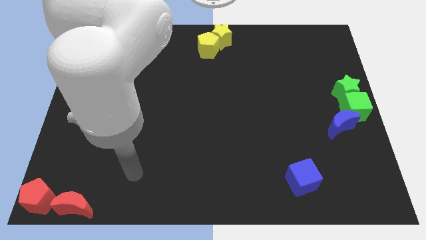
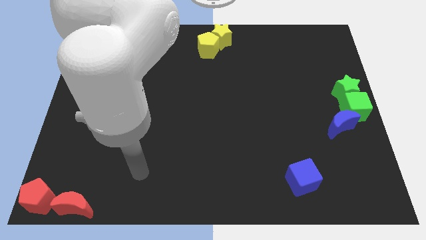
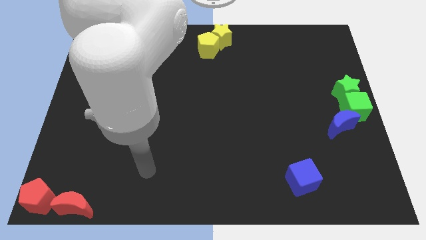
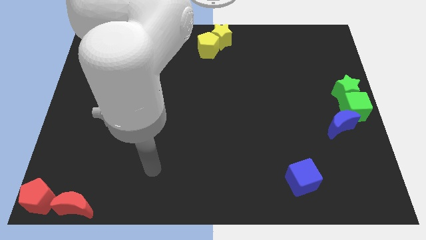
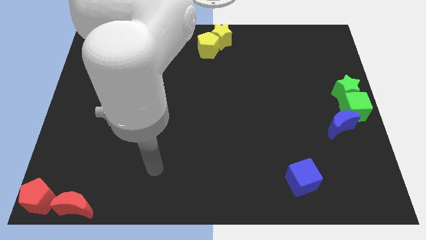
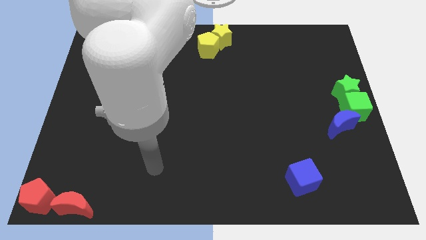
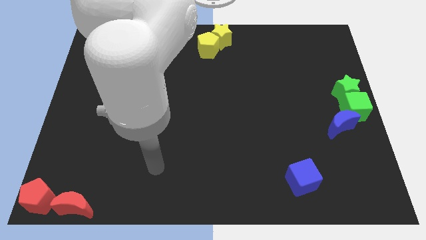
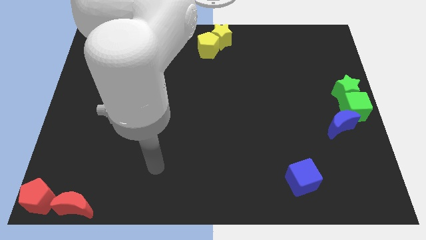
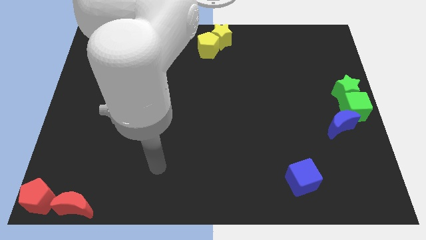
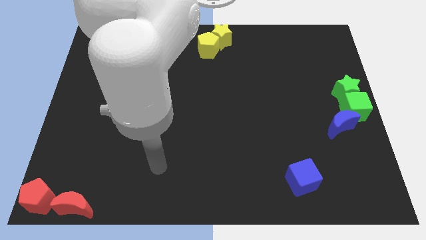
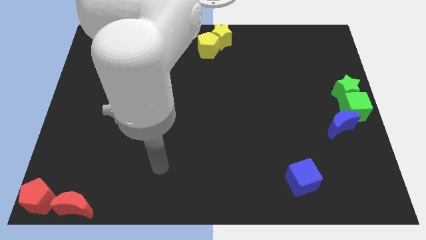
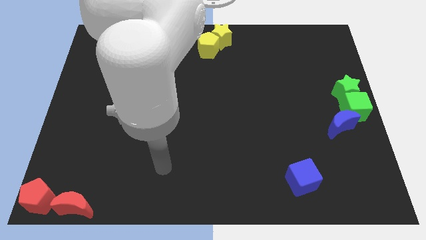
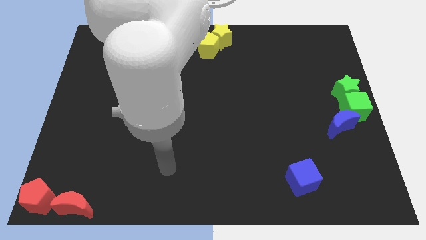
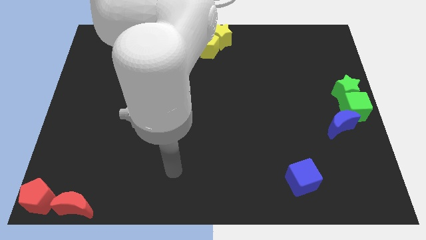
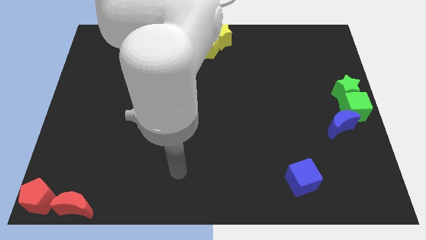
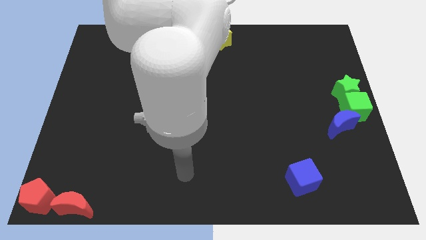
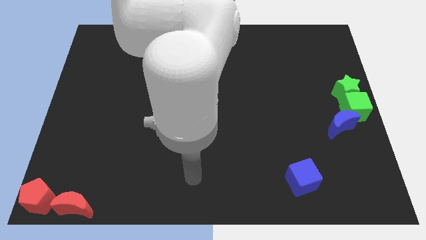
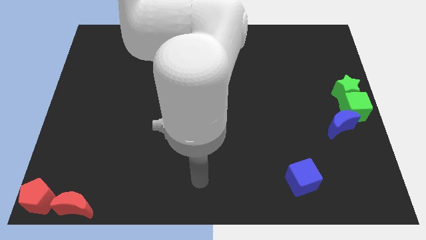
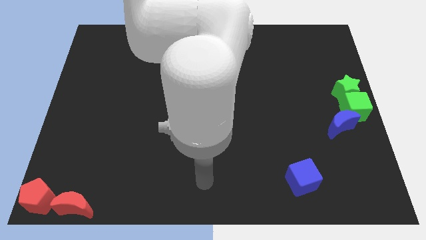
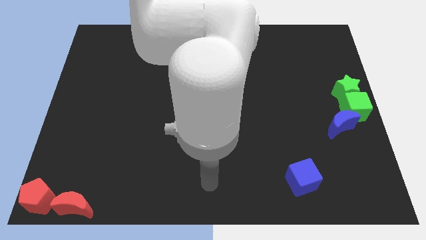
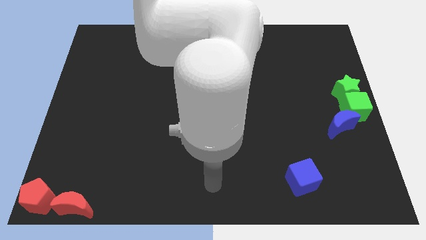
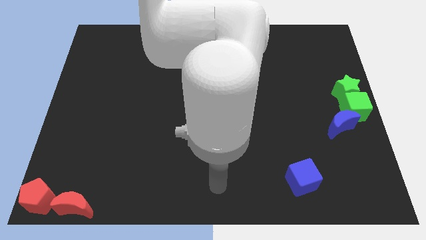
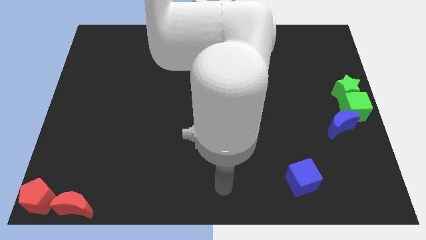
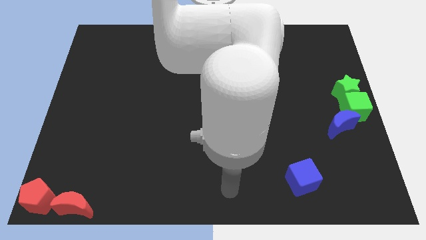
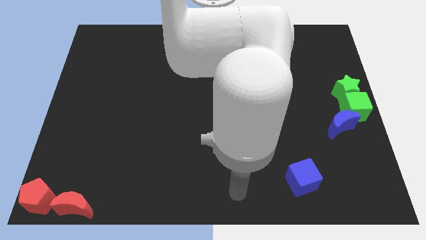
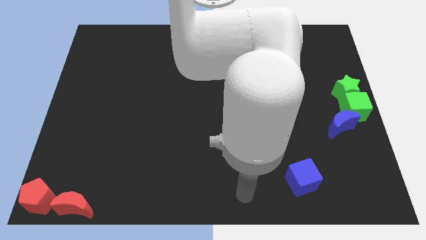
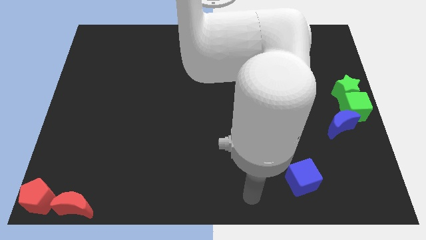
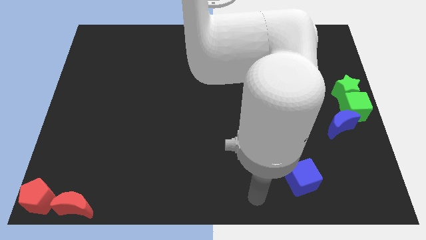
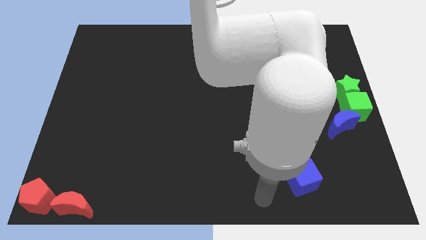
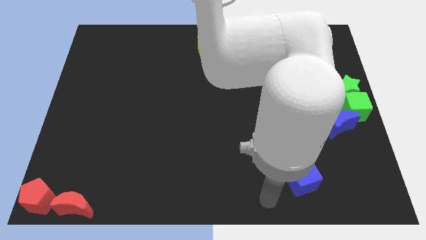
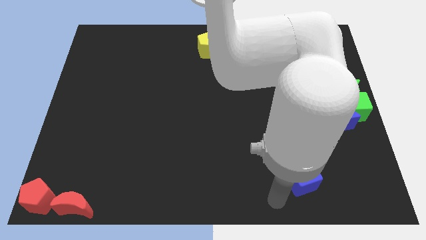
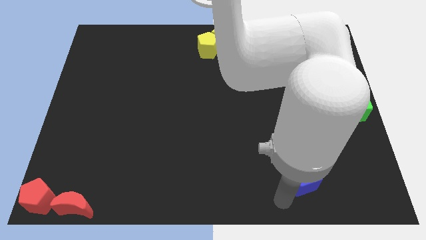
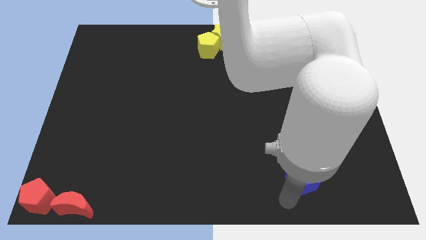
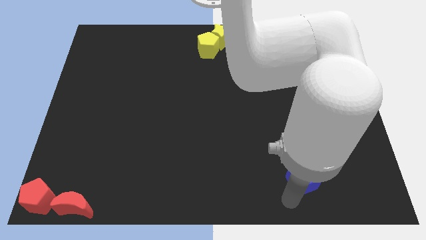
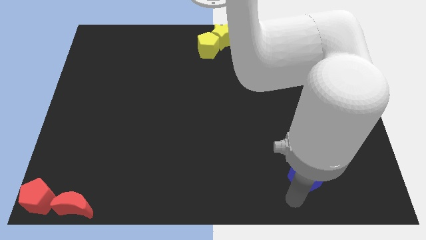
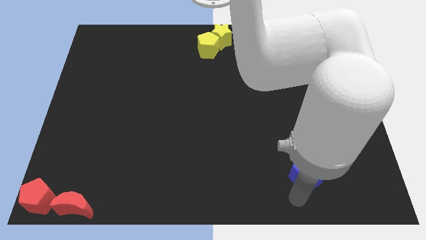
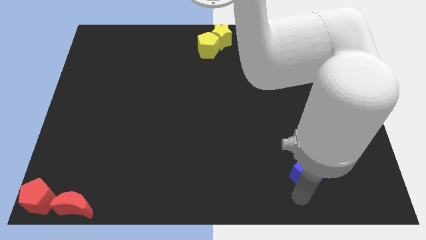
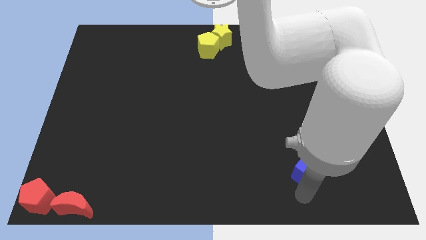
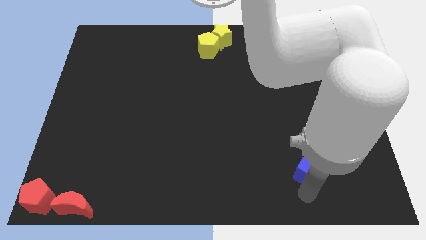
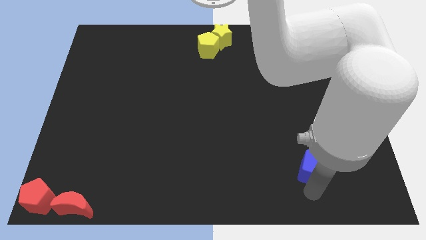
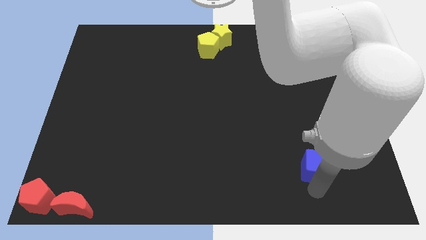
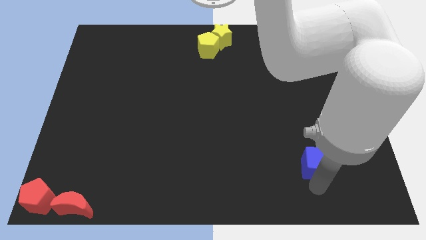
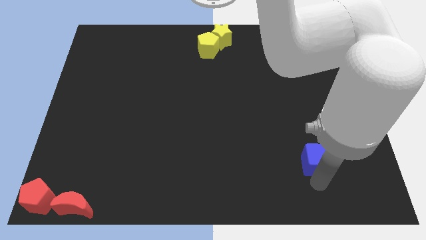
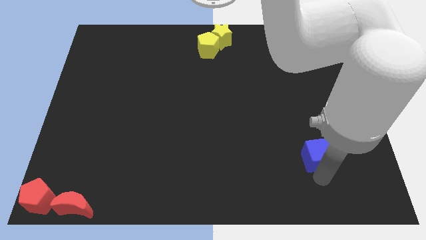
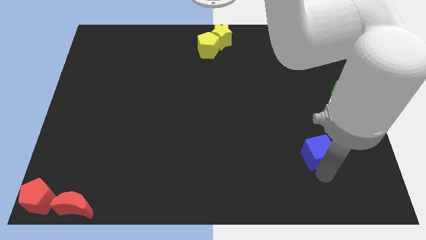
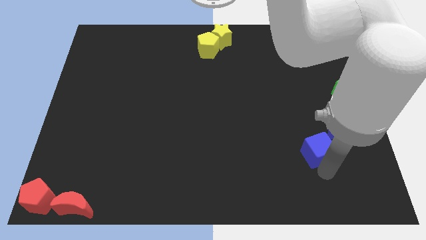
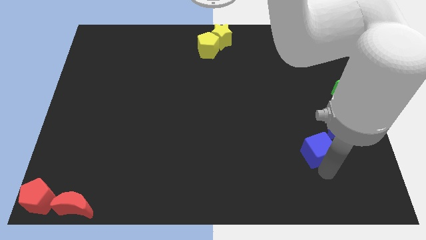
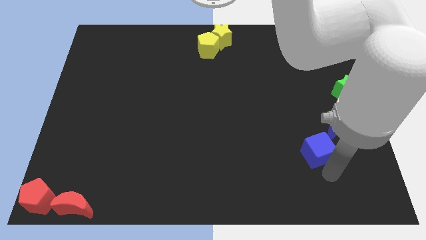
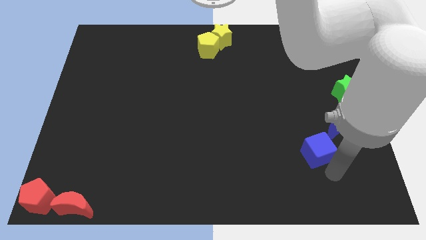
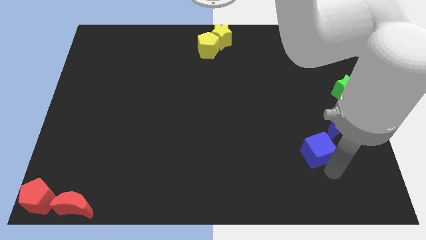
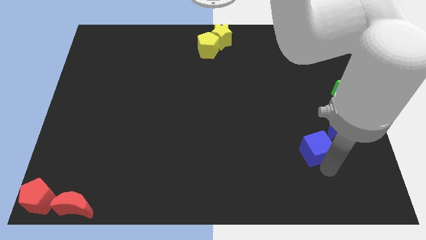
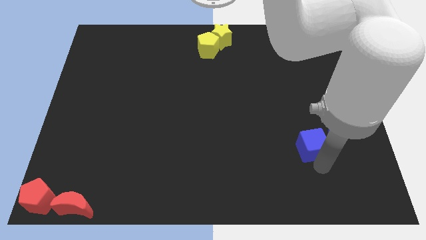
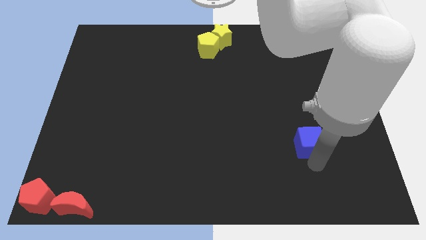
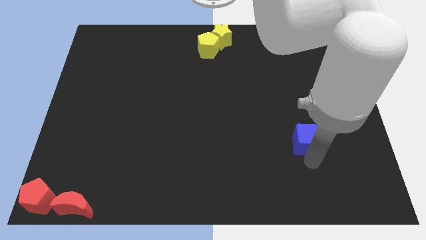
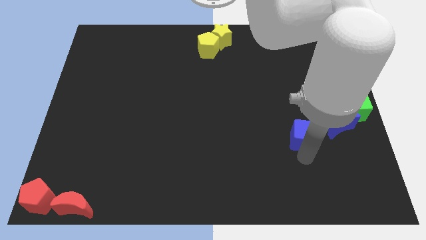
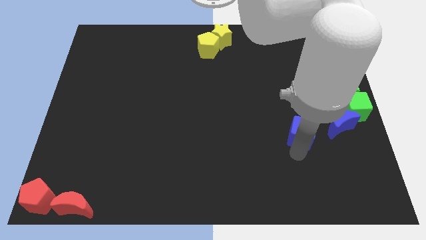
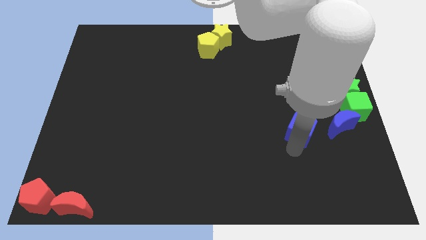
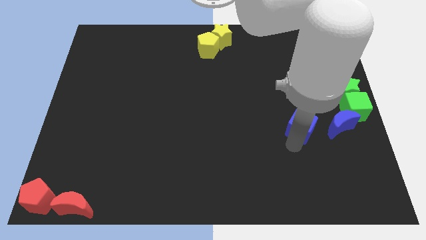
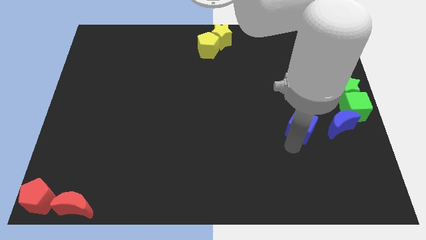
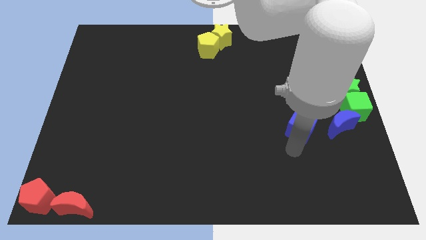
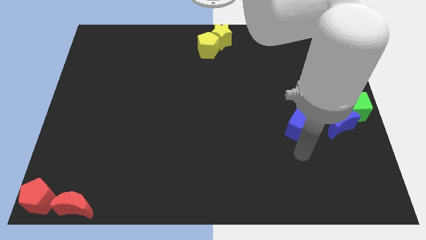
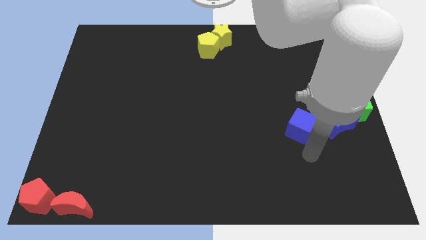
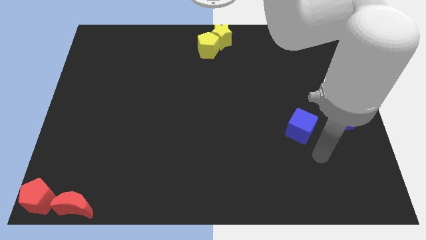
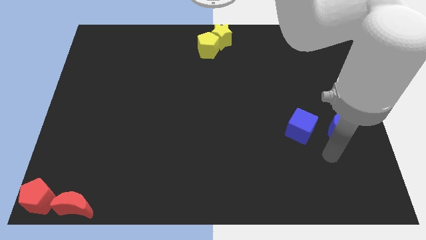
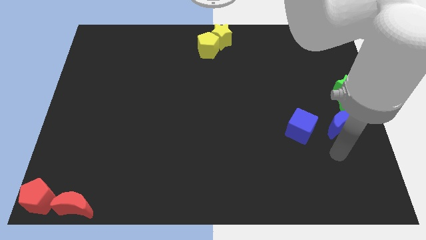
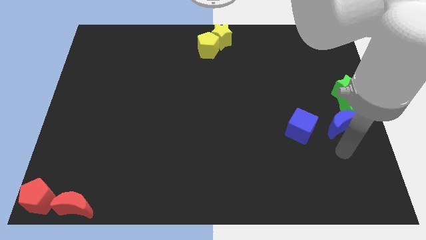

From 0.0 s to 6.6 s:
push the blue cube to the left of the blue moon

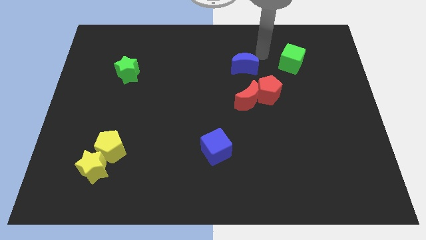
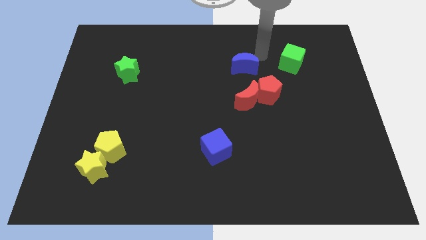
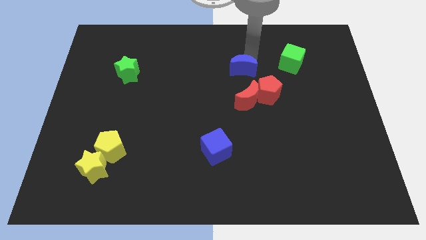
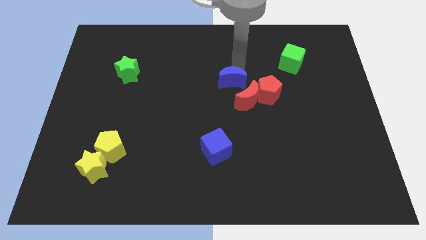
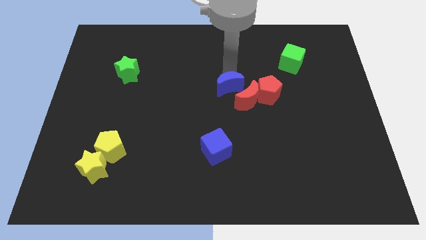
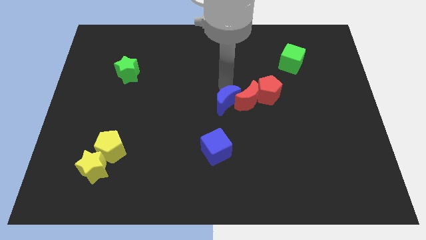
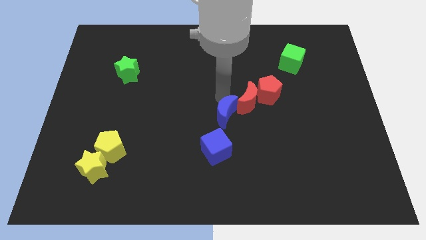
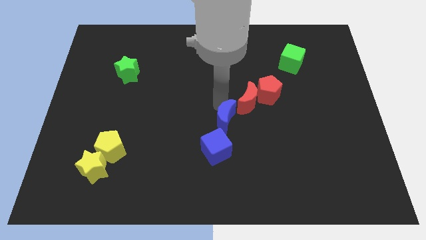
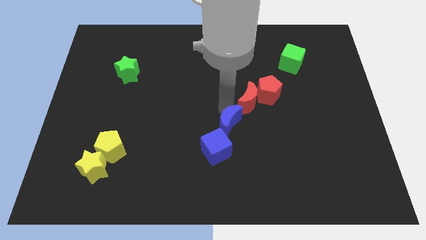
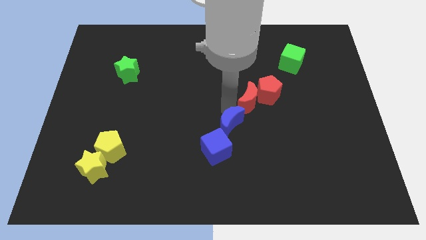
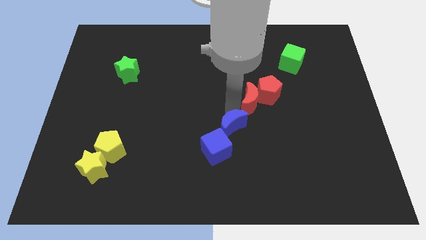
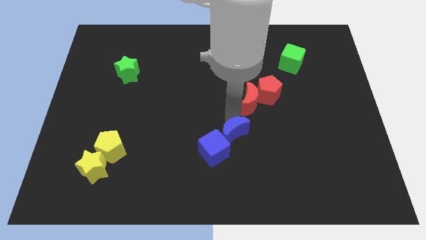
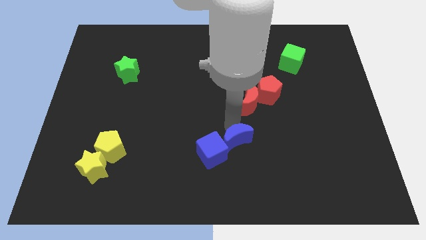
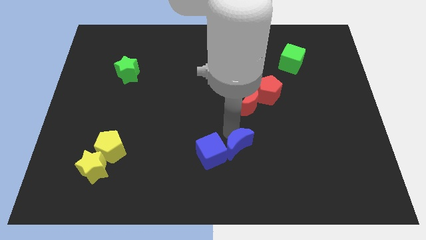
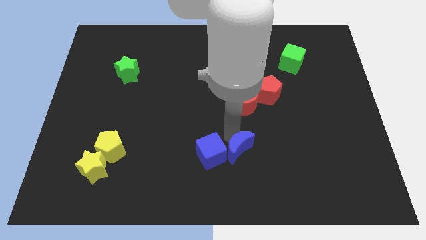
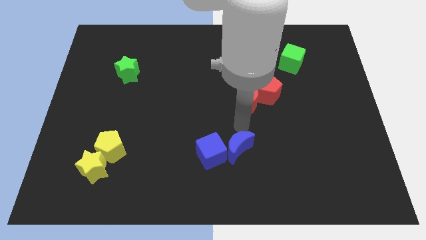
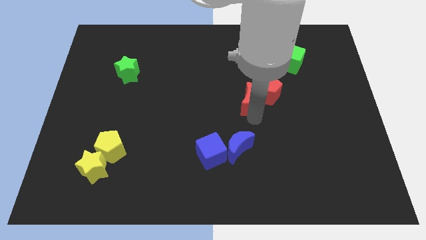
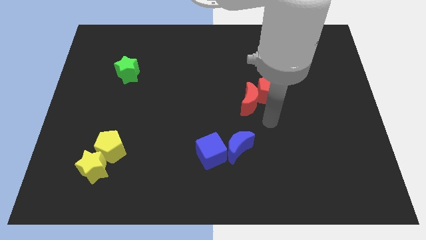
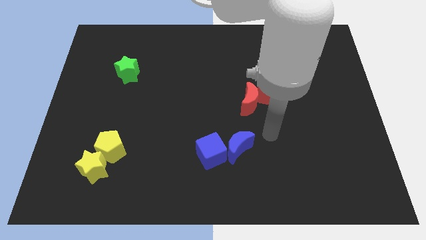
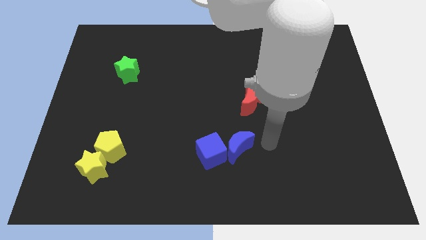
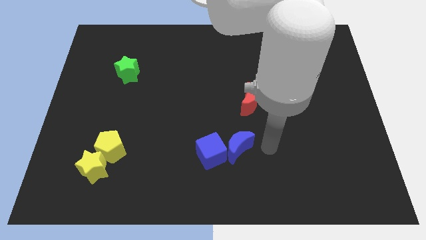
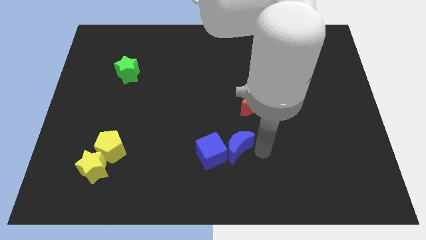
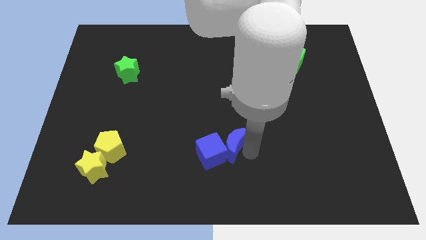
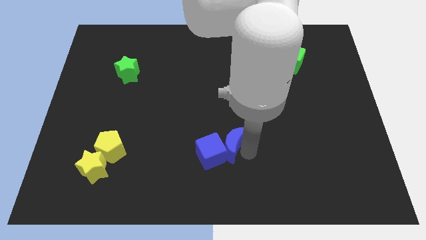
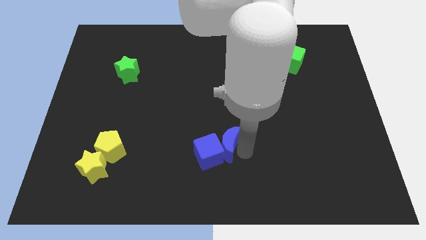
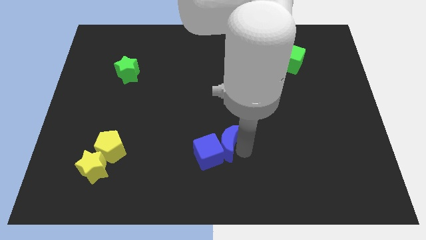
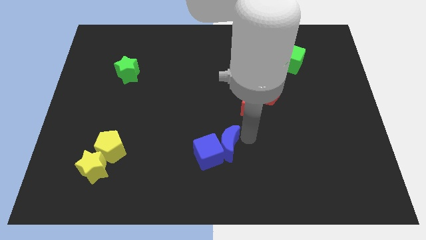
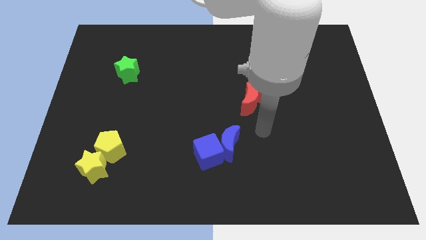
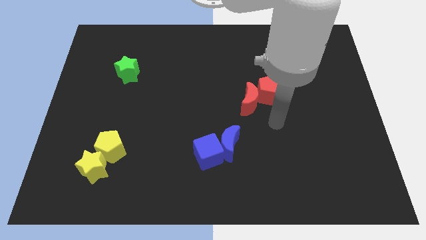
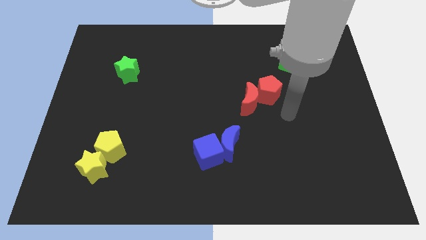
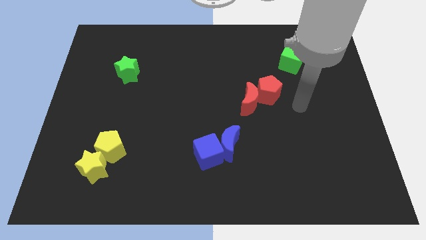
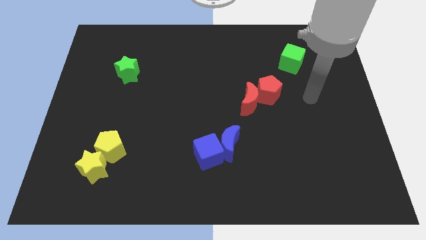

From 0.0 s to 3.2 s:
place the blue cube and blue crescent at the bottom center of the board
